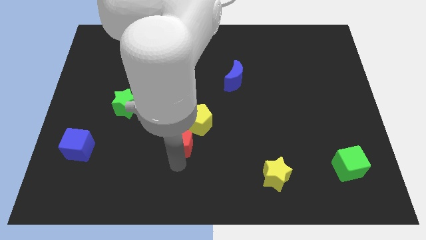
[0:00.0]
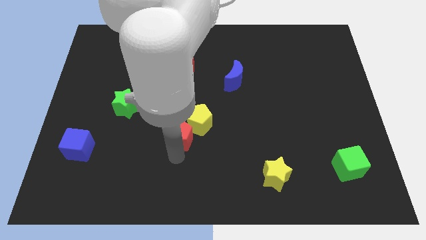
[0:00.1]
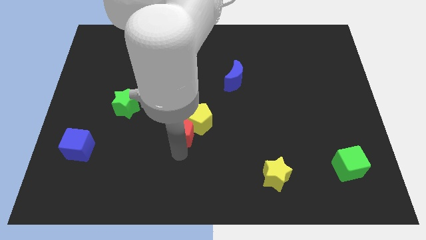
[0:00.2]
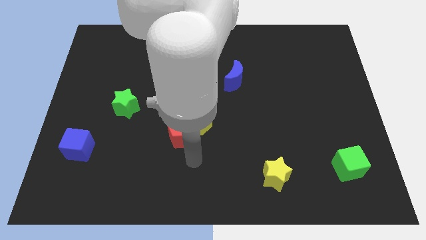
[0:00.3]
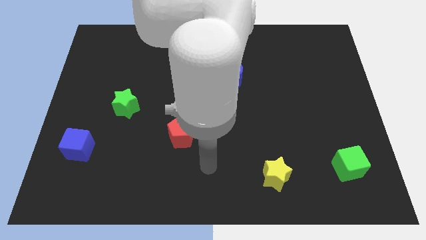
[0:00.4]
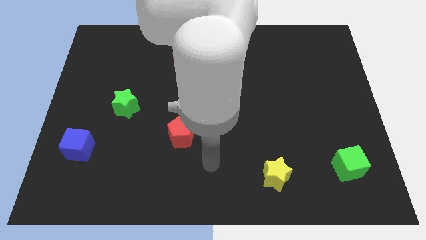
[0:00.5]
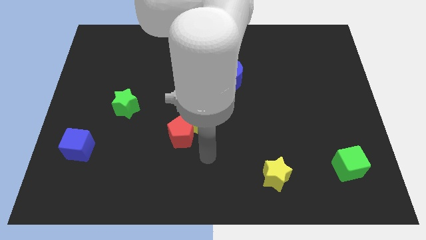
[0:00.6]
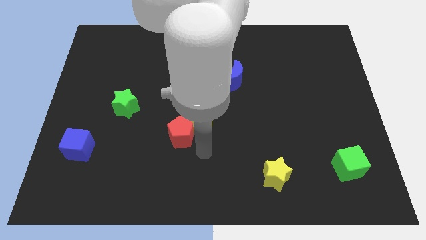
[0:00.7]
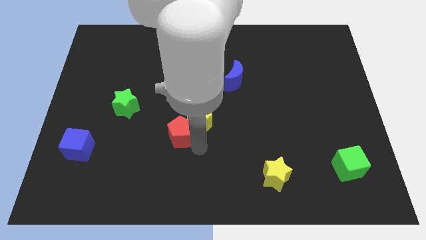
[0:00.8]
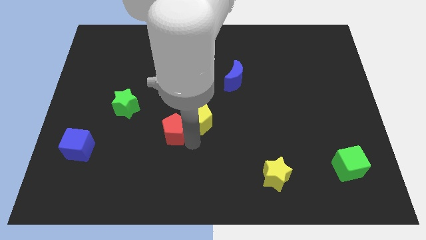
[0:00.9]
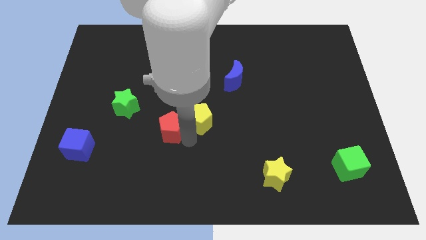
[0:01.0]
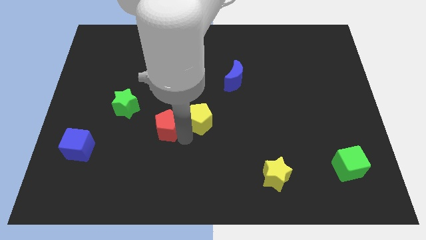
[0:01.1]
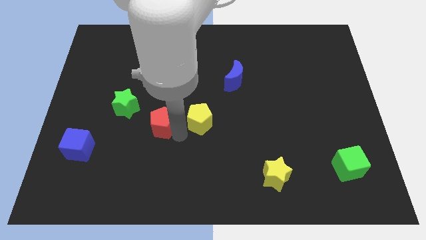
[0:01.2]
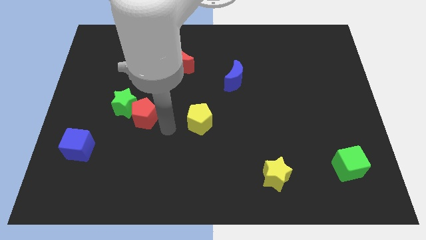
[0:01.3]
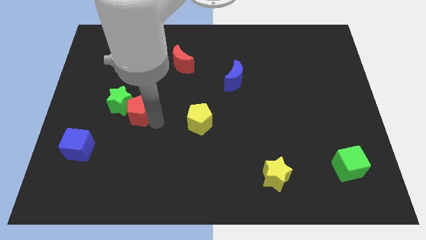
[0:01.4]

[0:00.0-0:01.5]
push the red pentagon into the green star

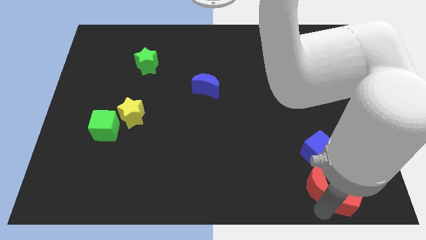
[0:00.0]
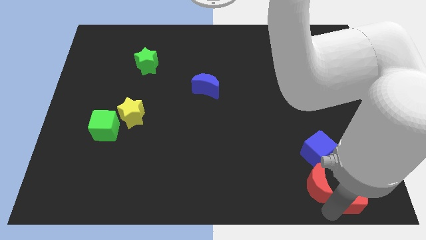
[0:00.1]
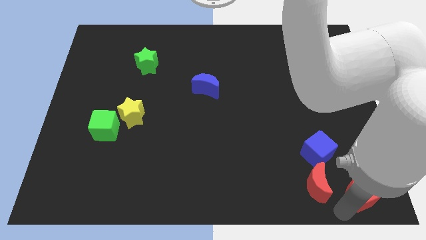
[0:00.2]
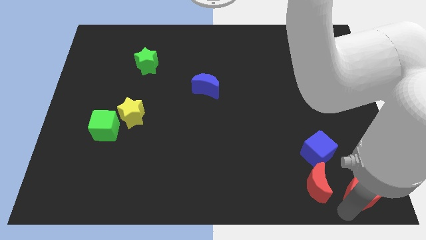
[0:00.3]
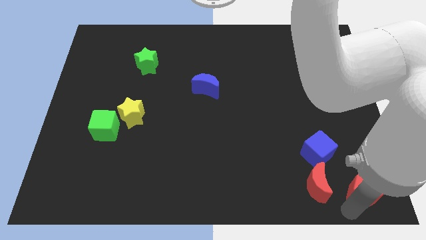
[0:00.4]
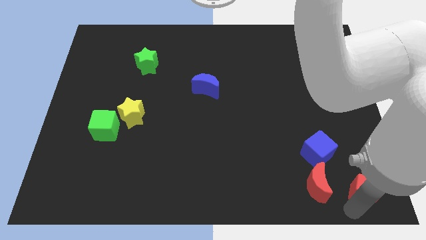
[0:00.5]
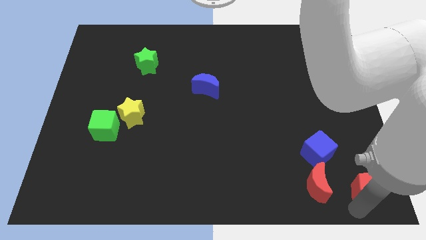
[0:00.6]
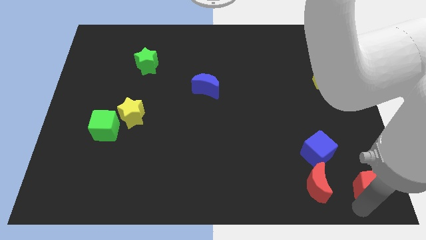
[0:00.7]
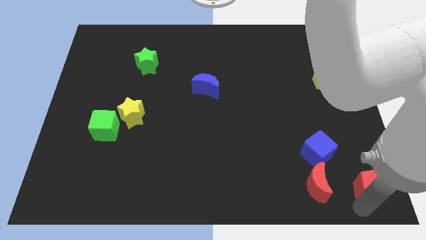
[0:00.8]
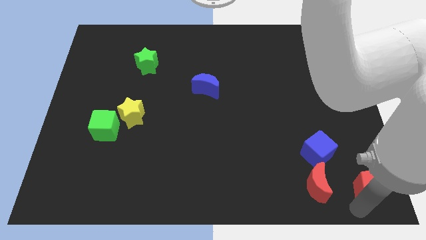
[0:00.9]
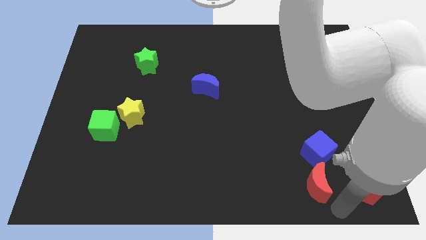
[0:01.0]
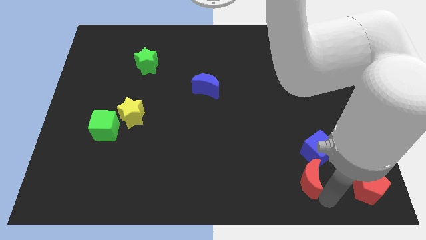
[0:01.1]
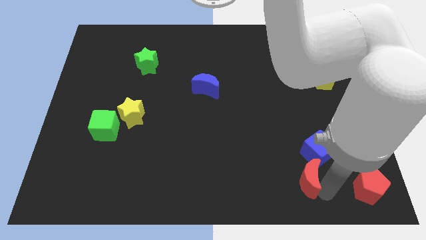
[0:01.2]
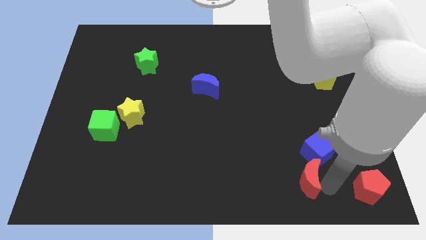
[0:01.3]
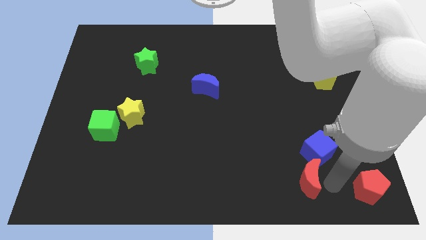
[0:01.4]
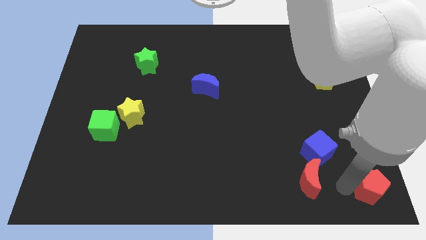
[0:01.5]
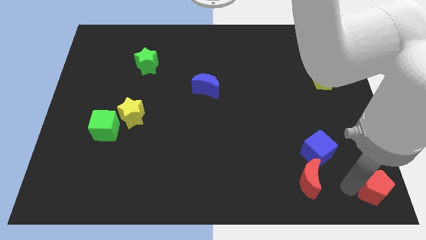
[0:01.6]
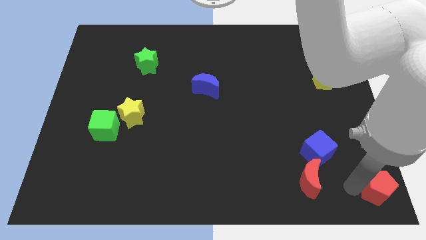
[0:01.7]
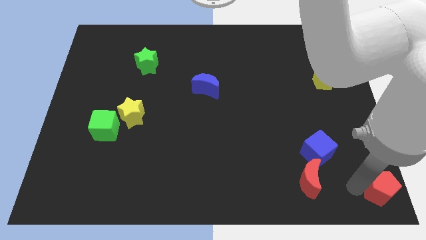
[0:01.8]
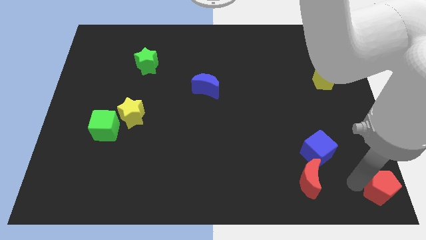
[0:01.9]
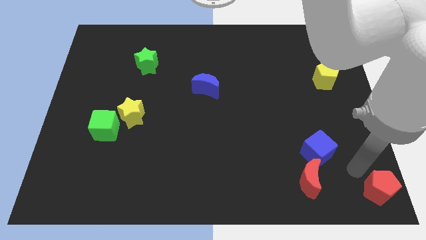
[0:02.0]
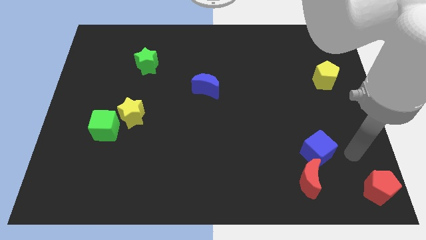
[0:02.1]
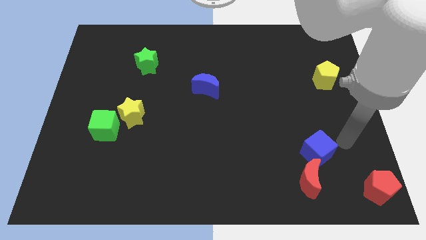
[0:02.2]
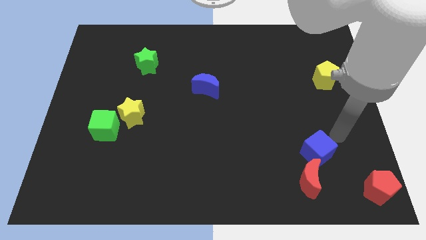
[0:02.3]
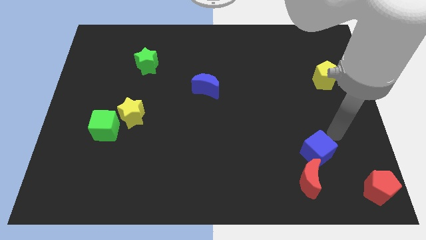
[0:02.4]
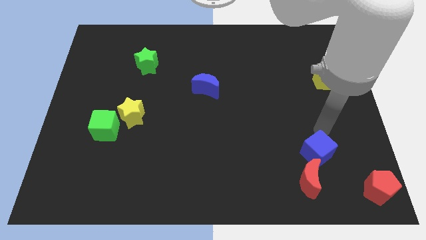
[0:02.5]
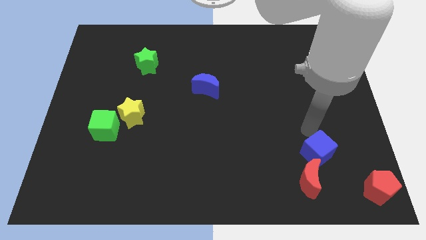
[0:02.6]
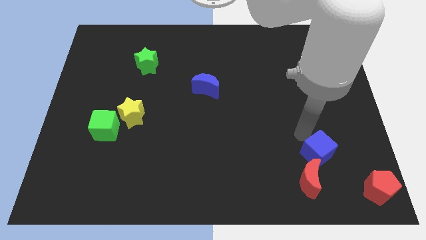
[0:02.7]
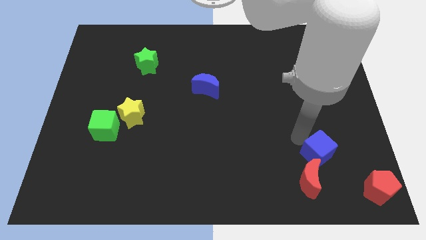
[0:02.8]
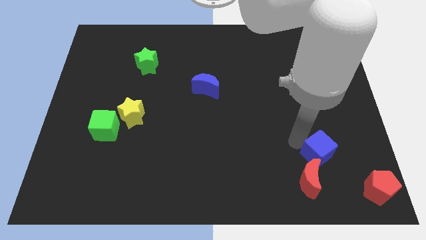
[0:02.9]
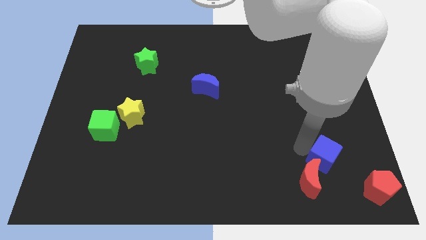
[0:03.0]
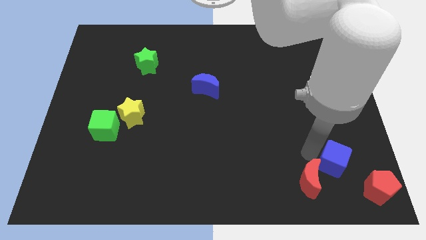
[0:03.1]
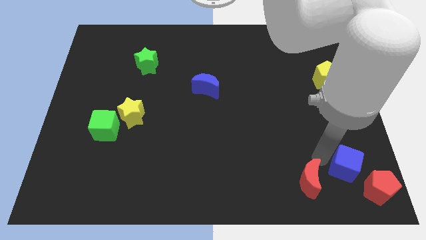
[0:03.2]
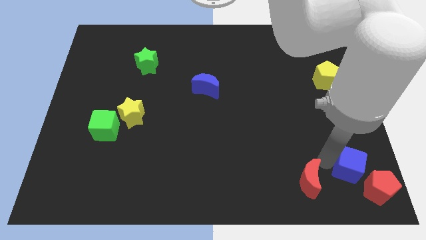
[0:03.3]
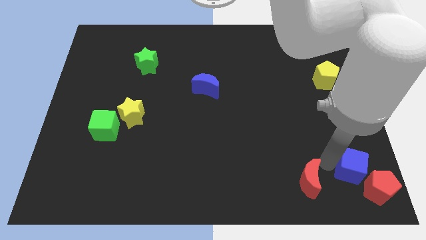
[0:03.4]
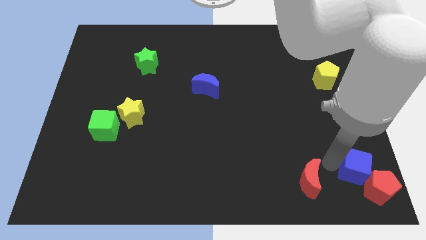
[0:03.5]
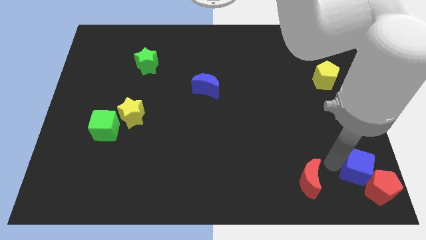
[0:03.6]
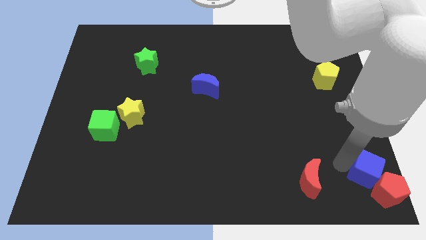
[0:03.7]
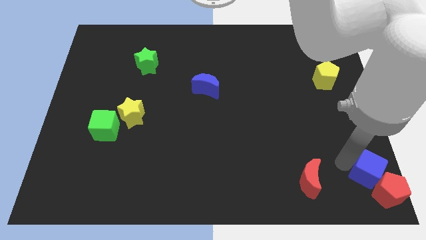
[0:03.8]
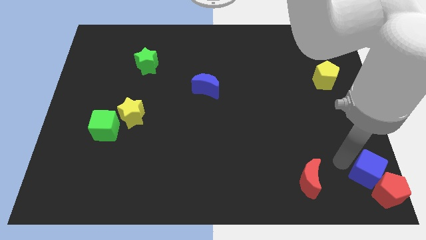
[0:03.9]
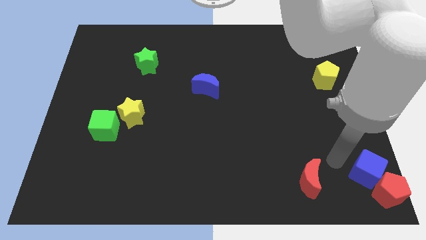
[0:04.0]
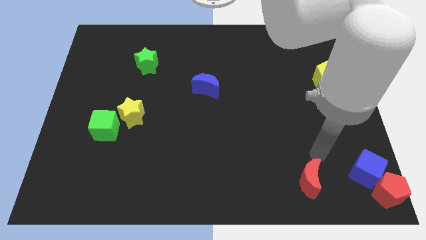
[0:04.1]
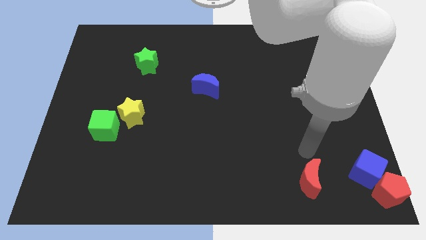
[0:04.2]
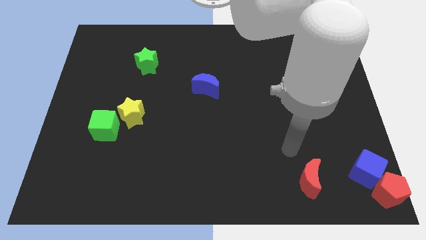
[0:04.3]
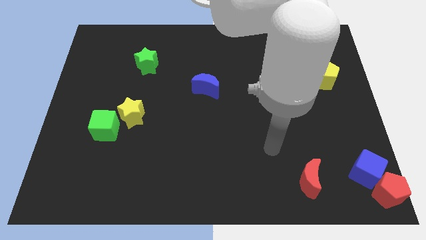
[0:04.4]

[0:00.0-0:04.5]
put the red pentagon and blue cube together at the bottom right corner of the board

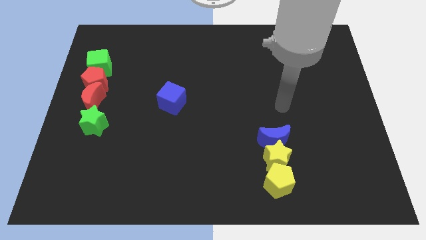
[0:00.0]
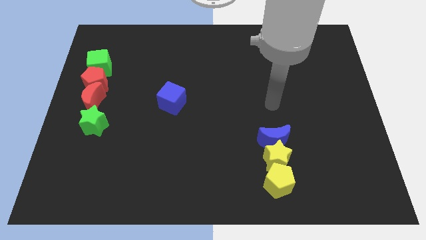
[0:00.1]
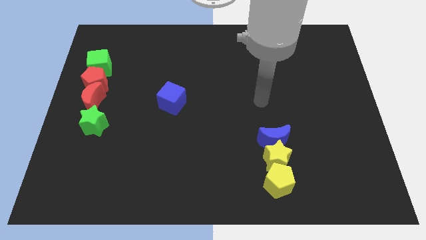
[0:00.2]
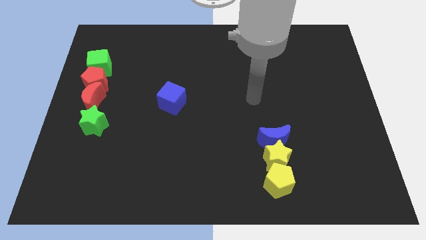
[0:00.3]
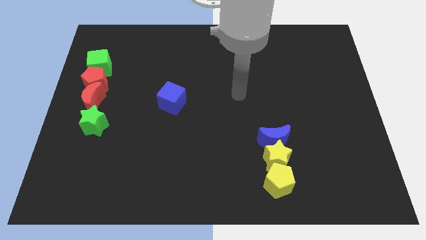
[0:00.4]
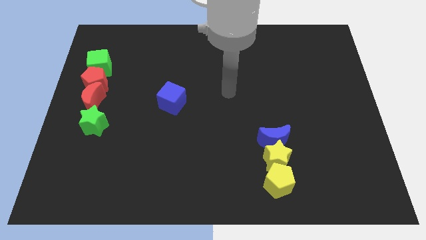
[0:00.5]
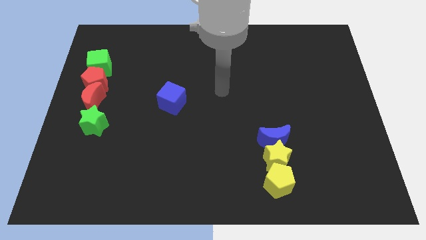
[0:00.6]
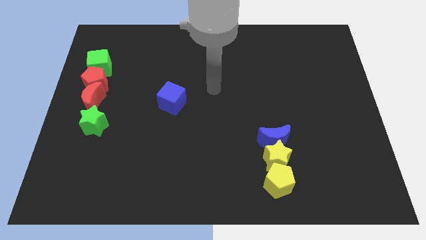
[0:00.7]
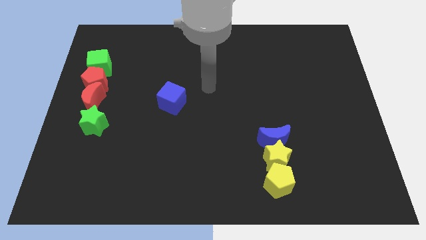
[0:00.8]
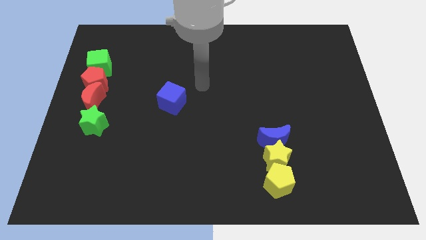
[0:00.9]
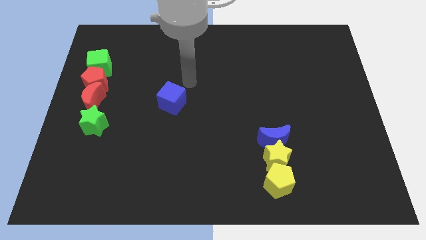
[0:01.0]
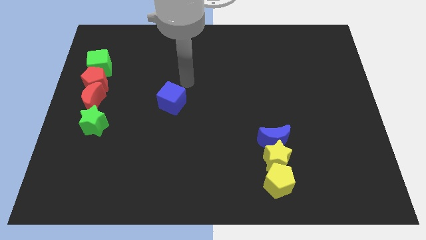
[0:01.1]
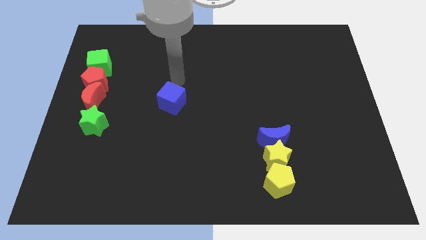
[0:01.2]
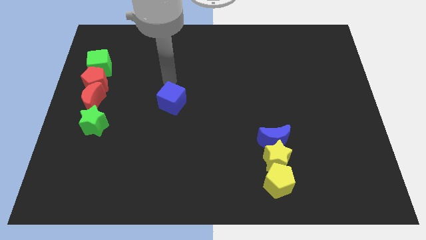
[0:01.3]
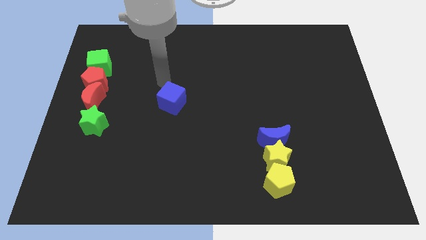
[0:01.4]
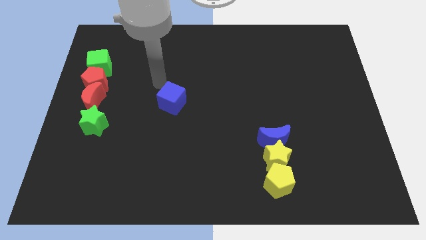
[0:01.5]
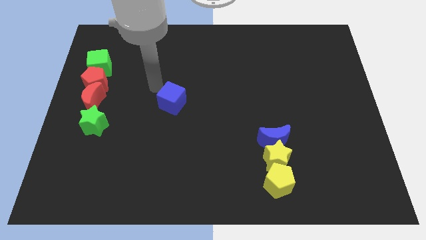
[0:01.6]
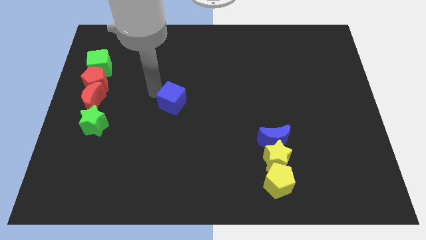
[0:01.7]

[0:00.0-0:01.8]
touch the blue cube with your arm

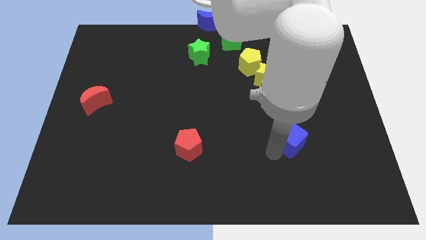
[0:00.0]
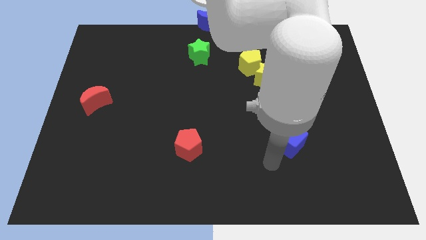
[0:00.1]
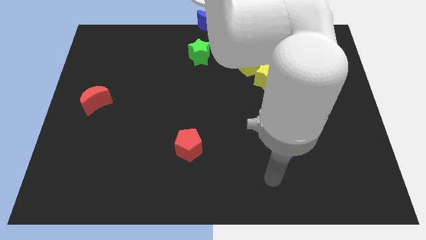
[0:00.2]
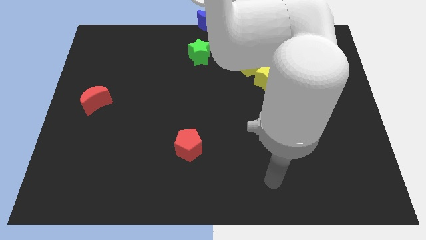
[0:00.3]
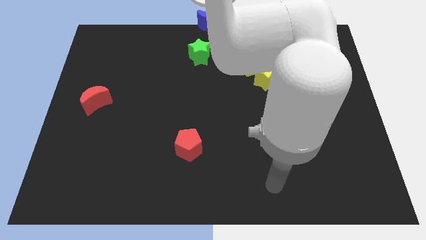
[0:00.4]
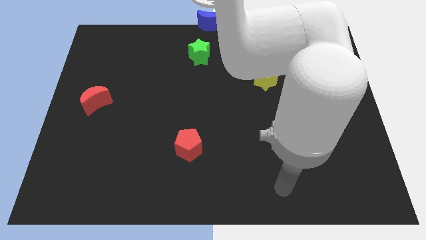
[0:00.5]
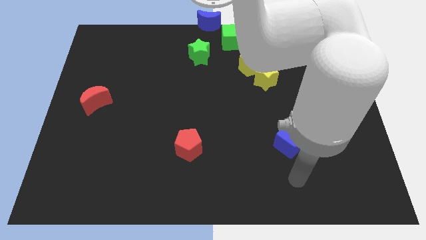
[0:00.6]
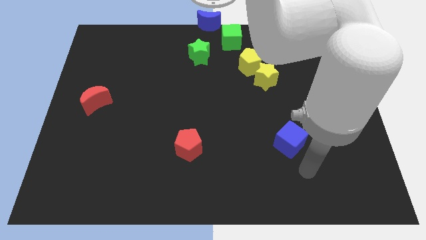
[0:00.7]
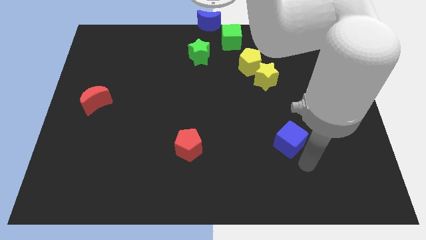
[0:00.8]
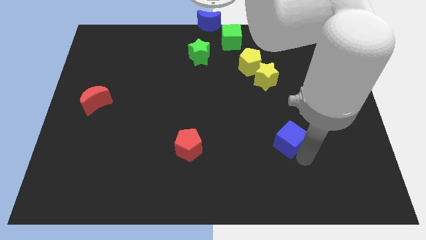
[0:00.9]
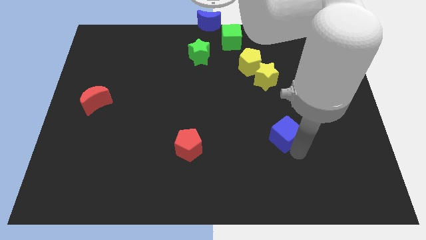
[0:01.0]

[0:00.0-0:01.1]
touch the bottom of blue cube

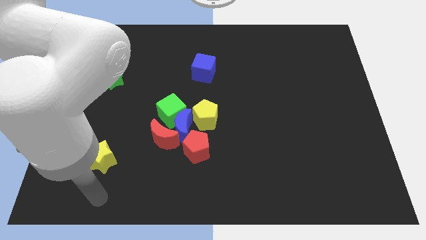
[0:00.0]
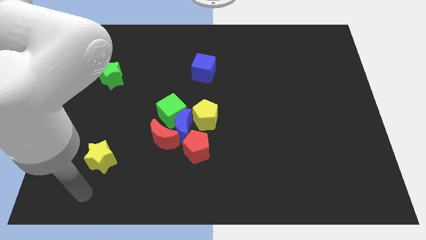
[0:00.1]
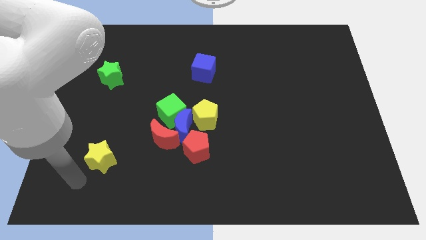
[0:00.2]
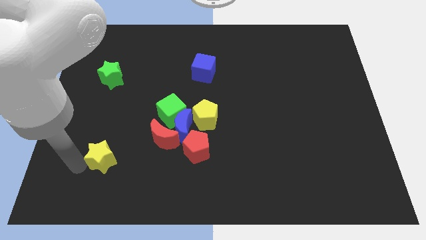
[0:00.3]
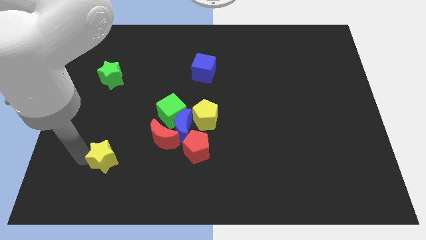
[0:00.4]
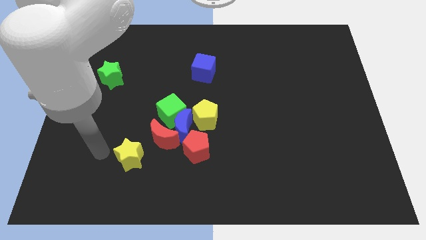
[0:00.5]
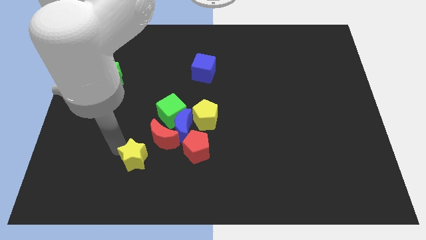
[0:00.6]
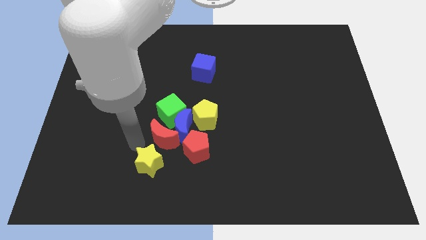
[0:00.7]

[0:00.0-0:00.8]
push the yellow star close to the red crescent
